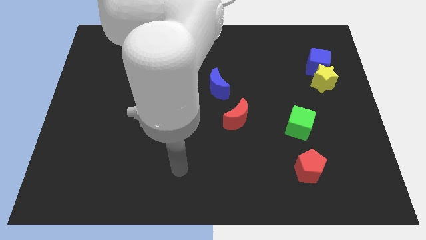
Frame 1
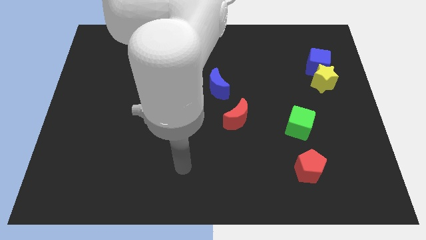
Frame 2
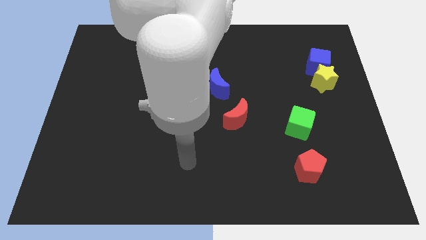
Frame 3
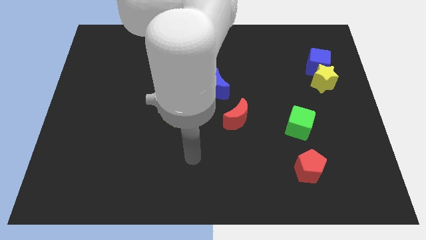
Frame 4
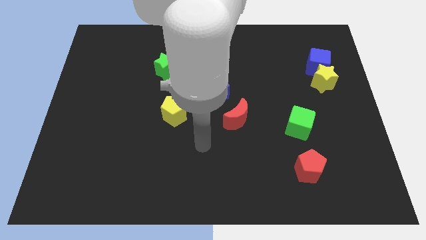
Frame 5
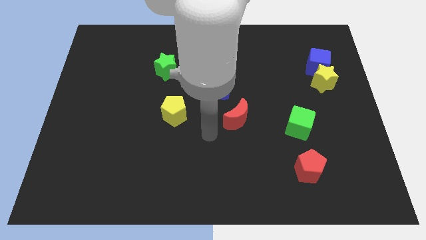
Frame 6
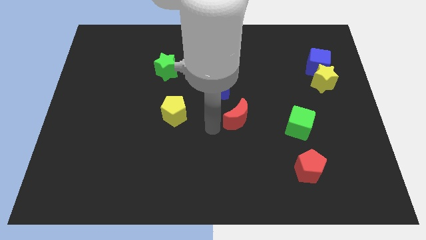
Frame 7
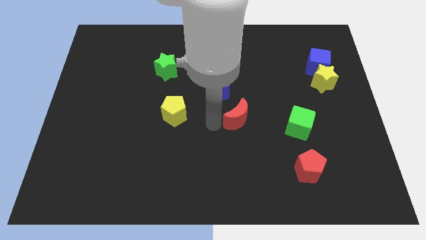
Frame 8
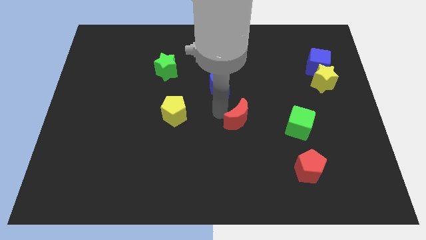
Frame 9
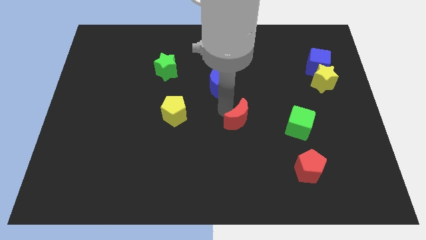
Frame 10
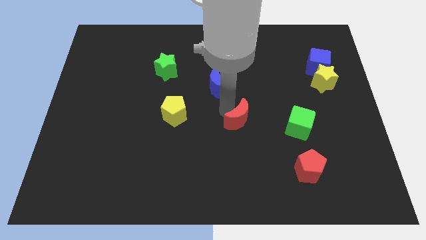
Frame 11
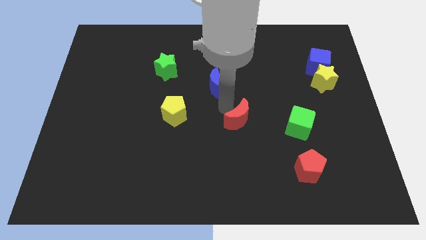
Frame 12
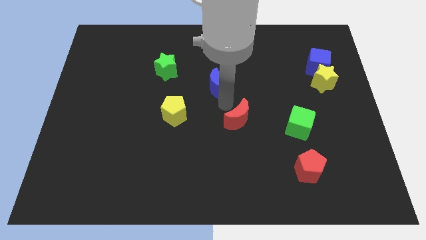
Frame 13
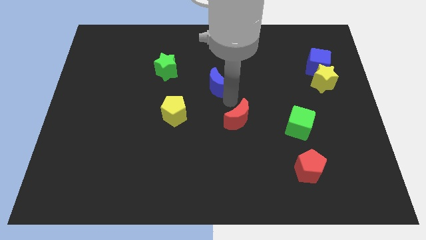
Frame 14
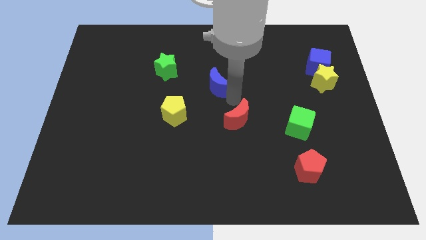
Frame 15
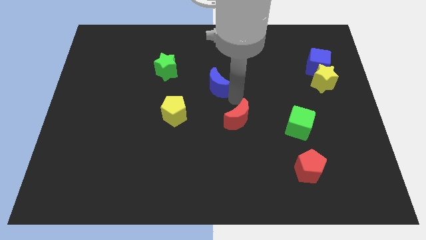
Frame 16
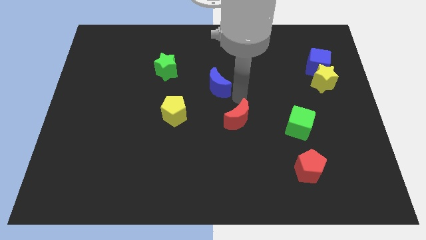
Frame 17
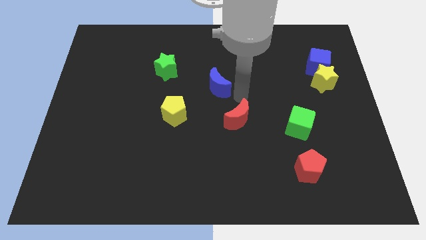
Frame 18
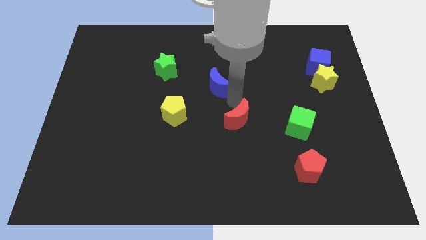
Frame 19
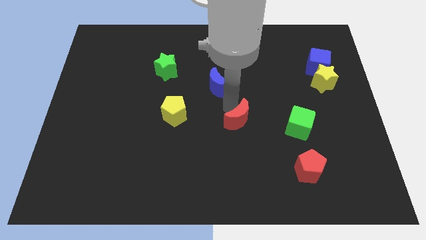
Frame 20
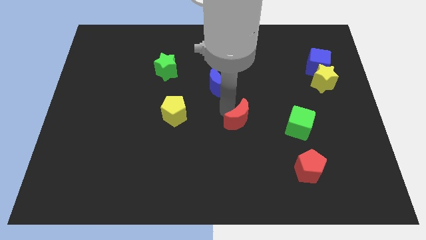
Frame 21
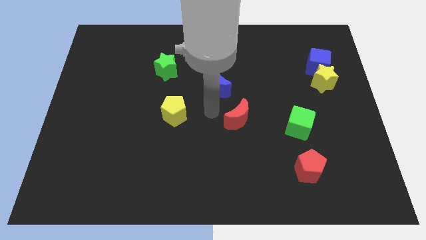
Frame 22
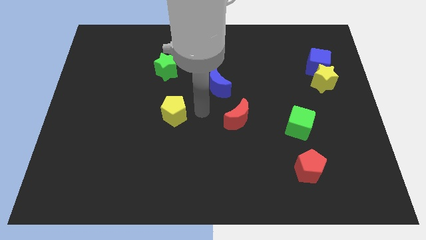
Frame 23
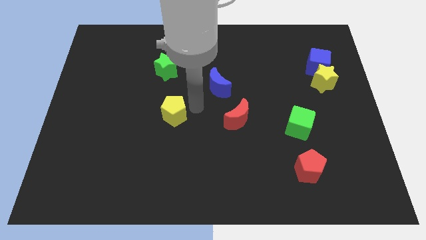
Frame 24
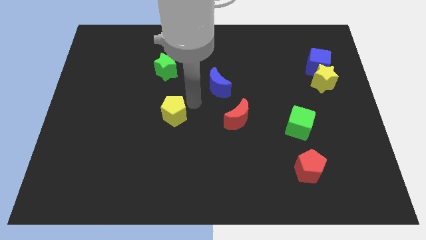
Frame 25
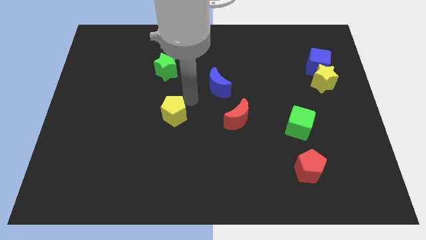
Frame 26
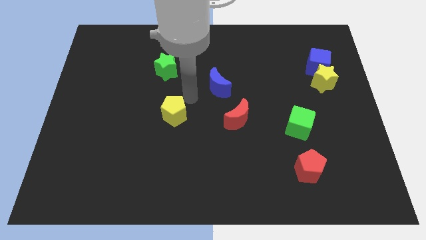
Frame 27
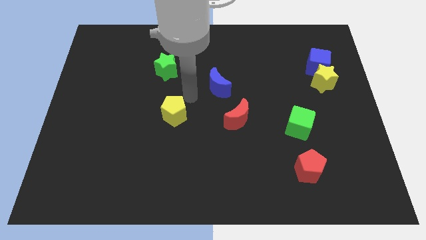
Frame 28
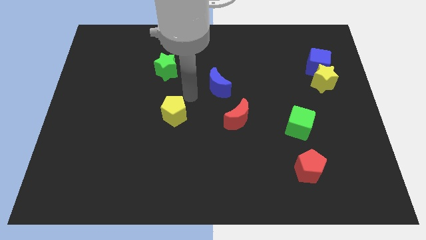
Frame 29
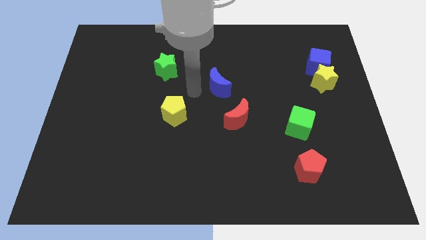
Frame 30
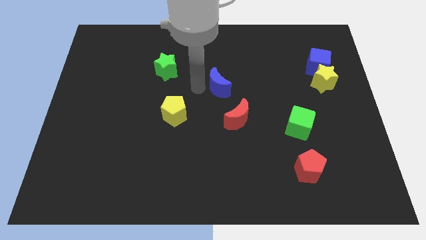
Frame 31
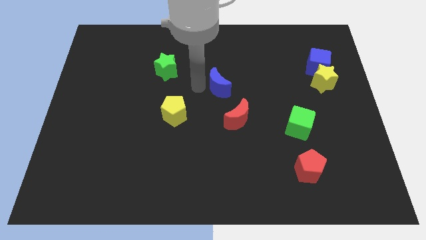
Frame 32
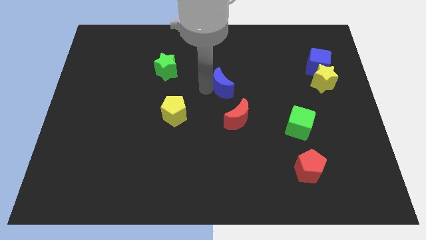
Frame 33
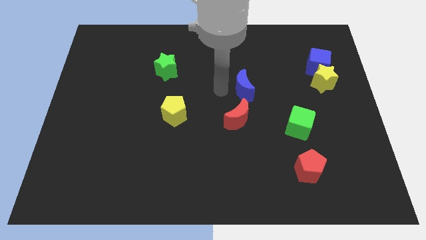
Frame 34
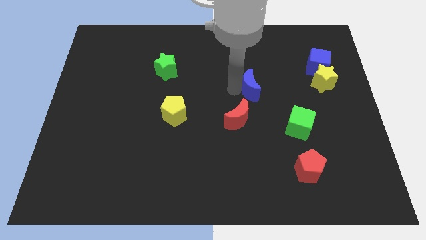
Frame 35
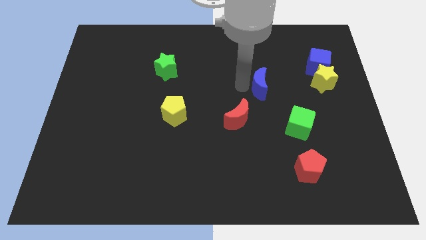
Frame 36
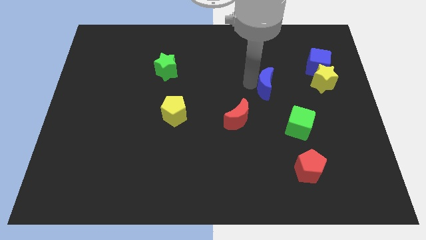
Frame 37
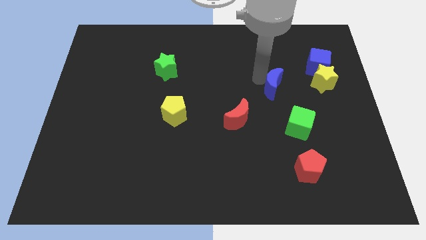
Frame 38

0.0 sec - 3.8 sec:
slightly push the blue crescent to the right of the board

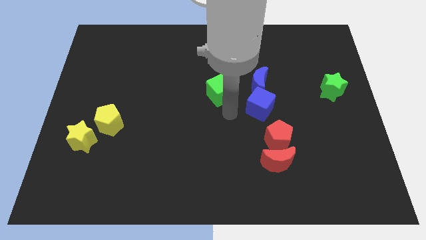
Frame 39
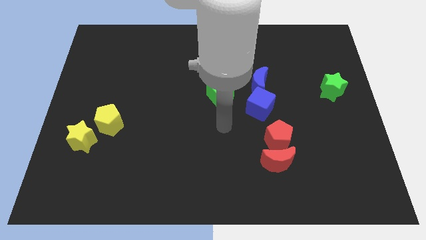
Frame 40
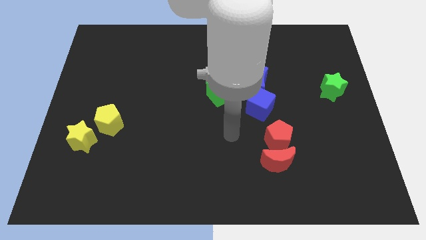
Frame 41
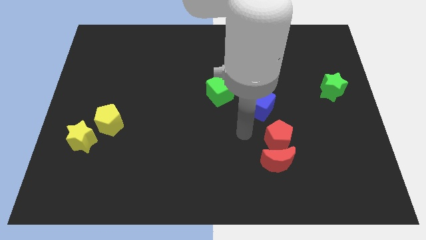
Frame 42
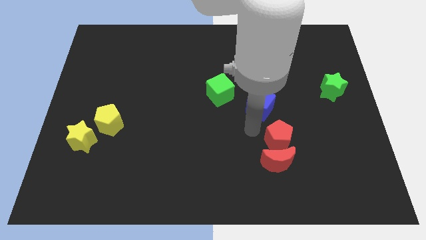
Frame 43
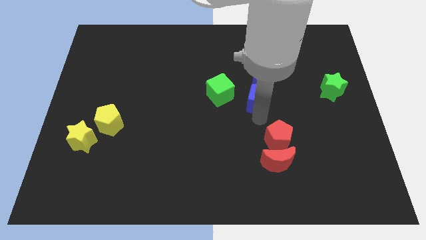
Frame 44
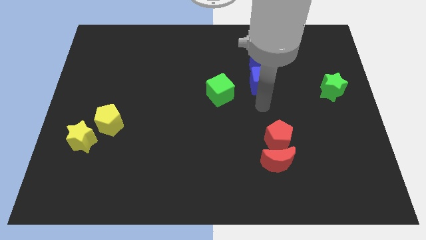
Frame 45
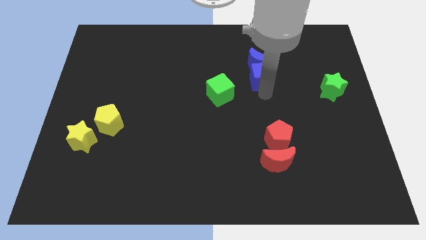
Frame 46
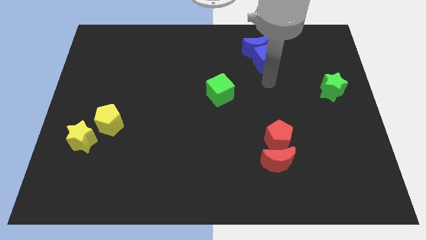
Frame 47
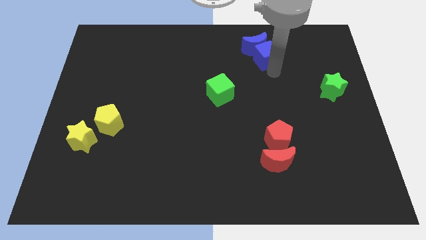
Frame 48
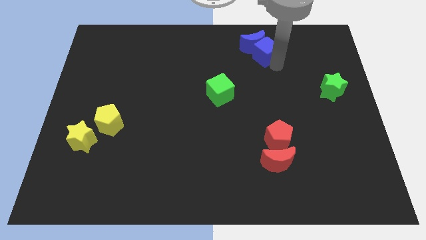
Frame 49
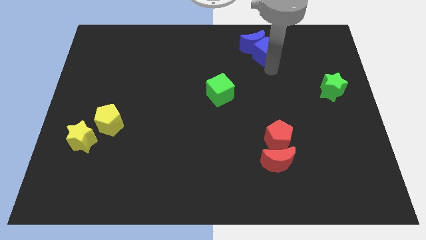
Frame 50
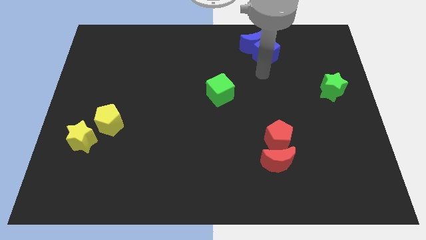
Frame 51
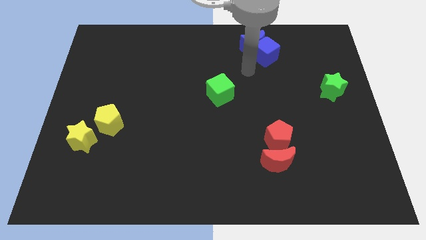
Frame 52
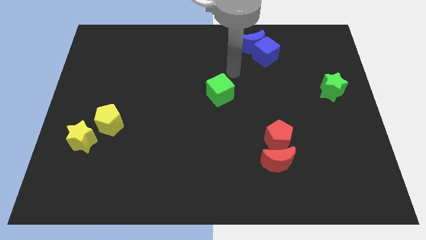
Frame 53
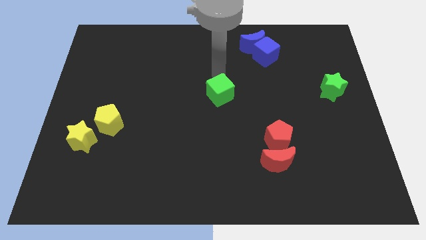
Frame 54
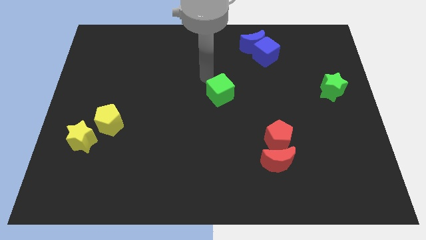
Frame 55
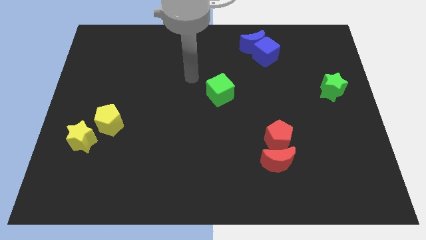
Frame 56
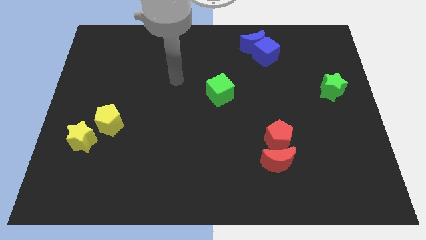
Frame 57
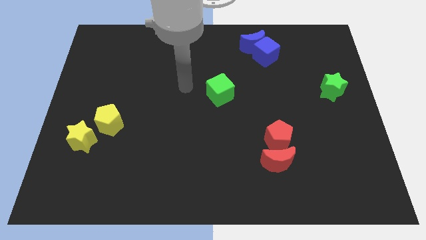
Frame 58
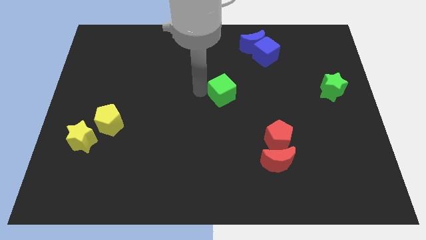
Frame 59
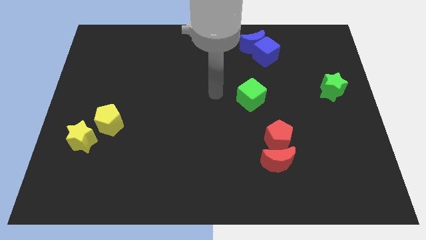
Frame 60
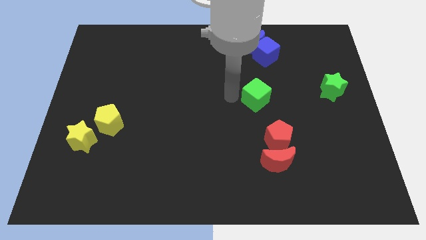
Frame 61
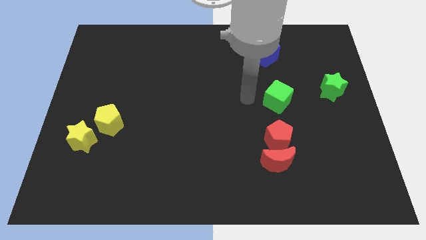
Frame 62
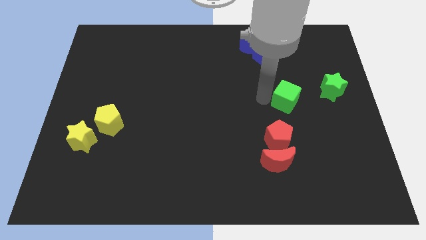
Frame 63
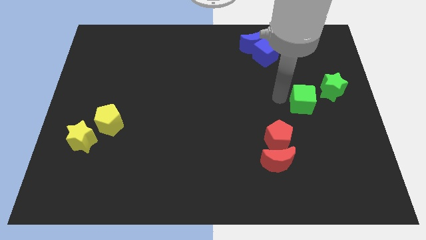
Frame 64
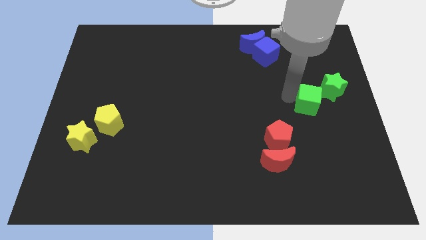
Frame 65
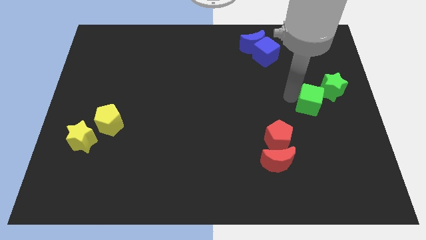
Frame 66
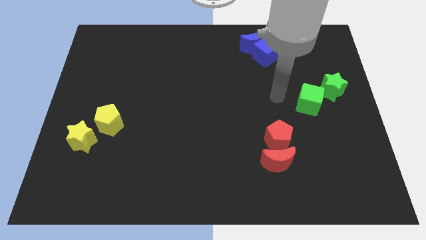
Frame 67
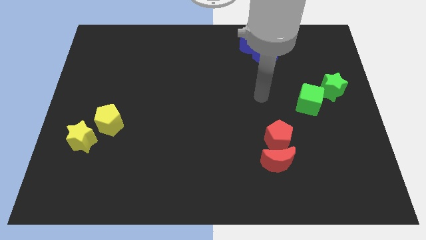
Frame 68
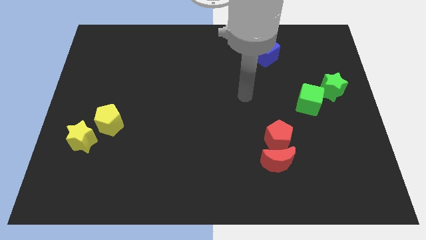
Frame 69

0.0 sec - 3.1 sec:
push green cube towards green star

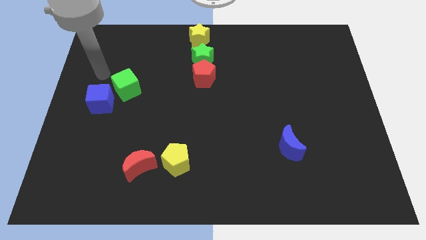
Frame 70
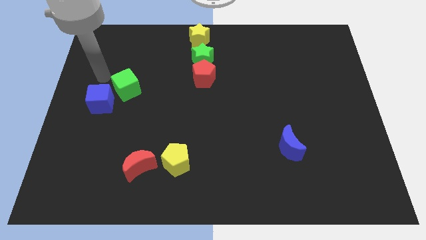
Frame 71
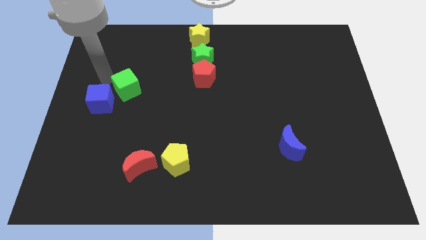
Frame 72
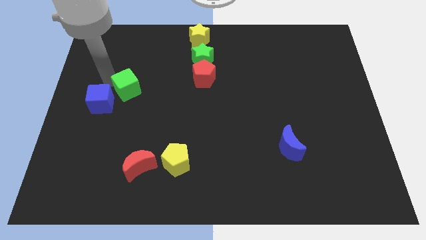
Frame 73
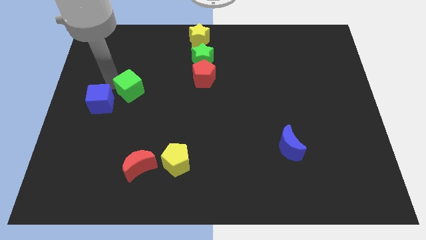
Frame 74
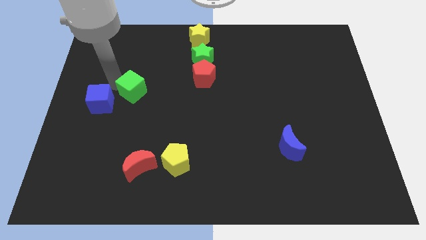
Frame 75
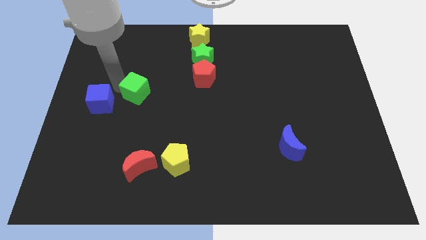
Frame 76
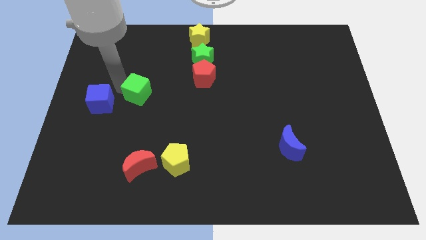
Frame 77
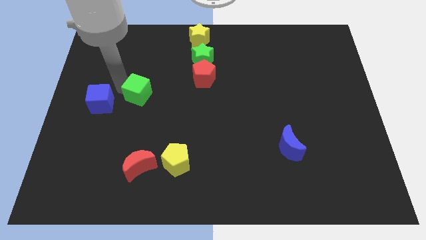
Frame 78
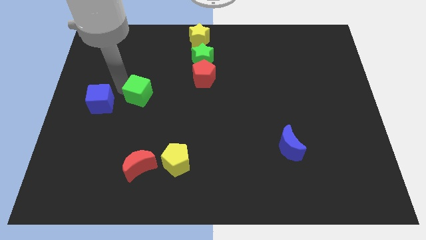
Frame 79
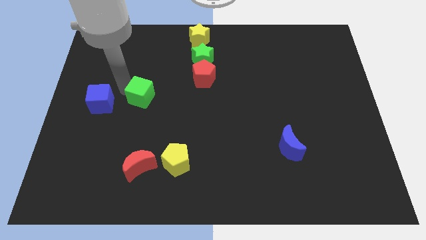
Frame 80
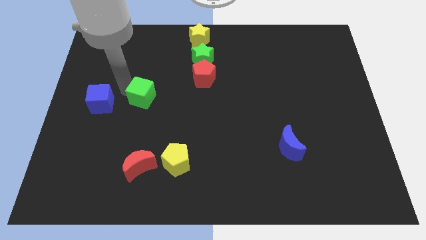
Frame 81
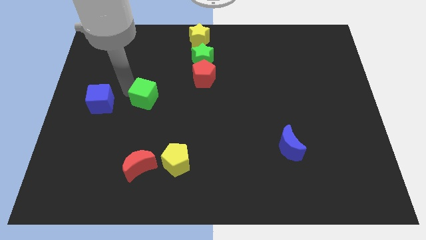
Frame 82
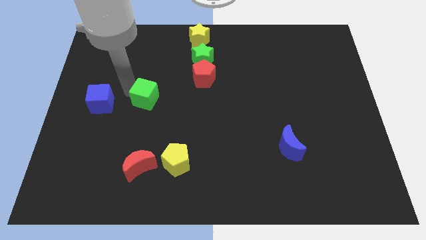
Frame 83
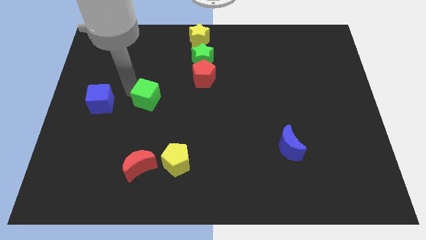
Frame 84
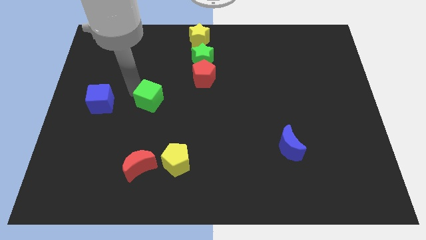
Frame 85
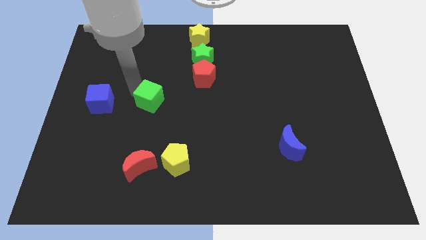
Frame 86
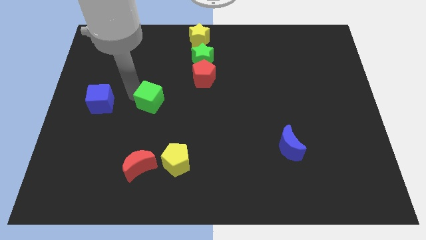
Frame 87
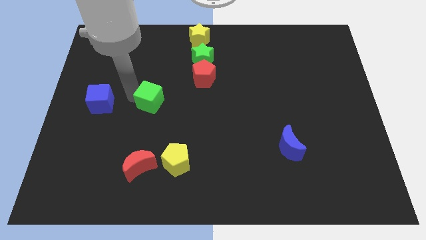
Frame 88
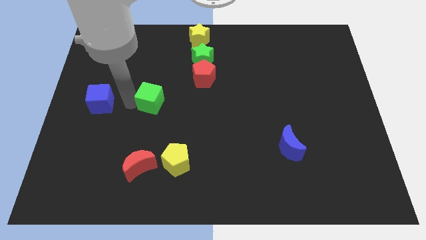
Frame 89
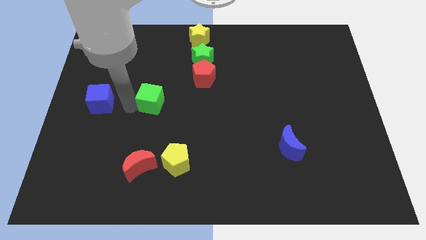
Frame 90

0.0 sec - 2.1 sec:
separate the green cube from blue cube
